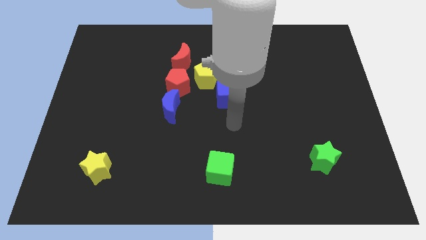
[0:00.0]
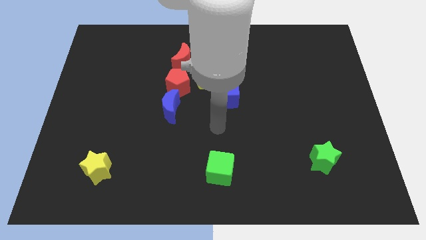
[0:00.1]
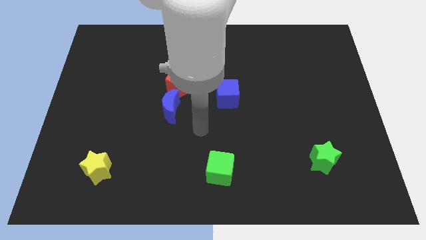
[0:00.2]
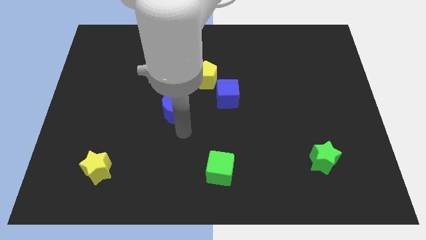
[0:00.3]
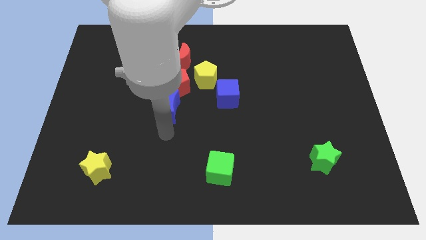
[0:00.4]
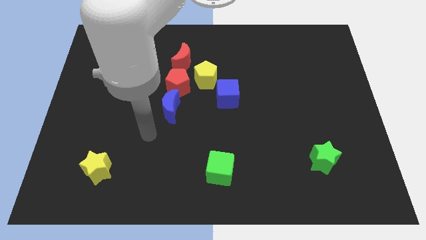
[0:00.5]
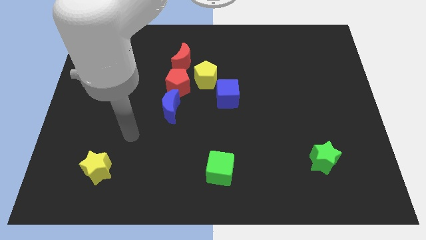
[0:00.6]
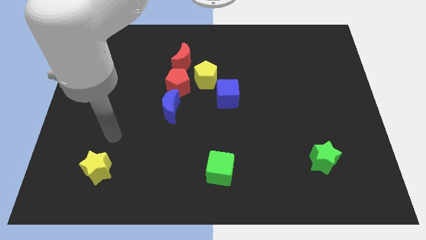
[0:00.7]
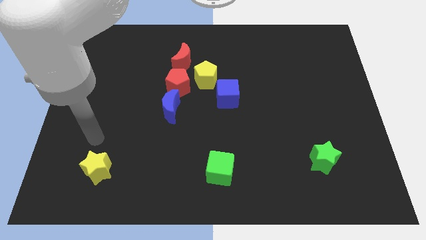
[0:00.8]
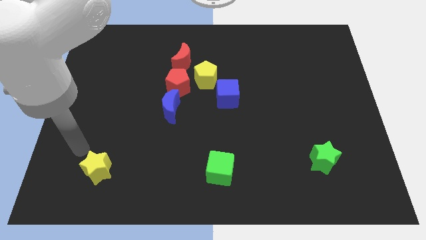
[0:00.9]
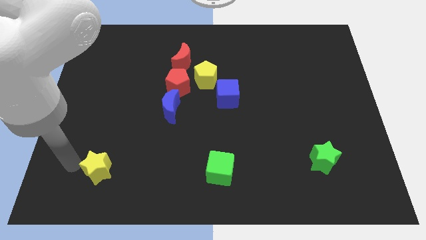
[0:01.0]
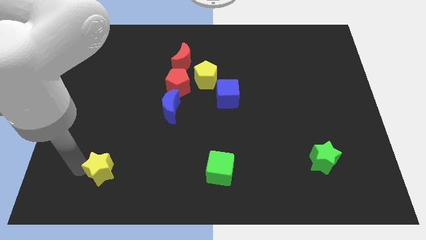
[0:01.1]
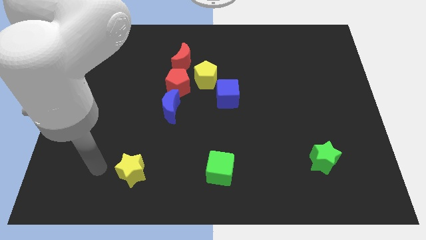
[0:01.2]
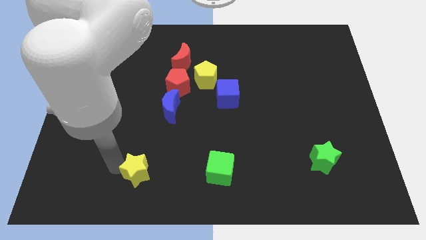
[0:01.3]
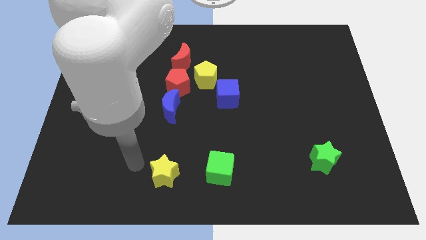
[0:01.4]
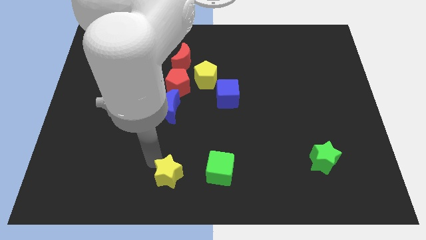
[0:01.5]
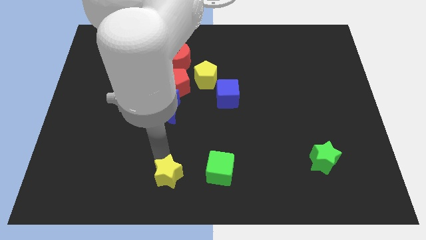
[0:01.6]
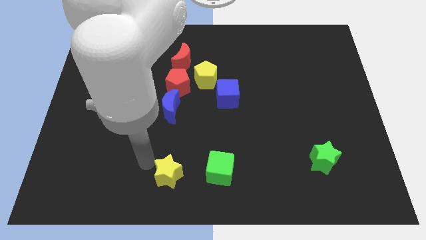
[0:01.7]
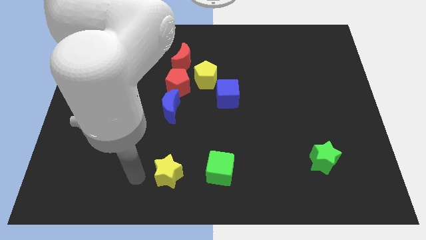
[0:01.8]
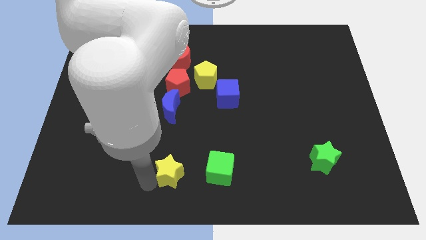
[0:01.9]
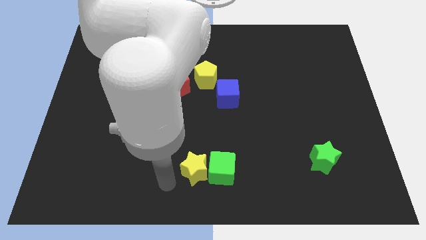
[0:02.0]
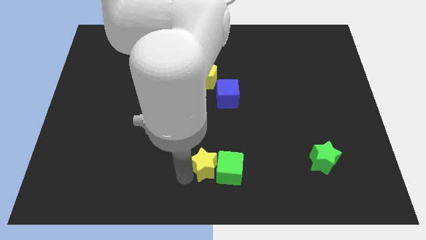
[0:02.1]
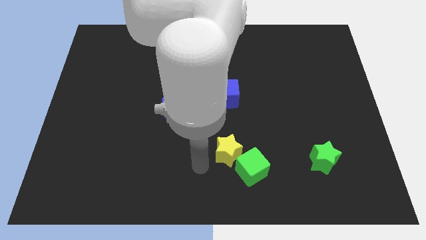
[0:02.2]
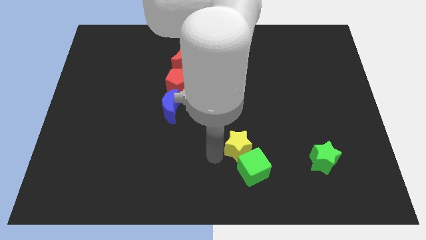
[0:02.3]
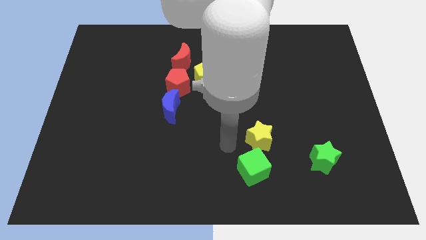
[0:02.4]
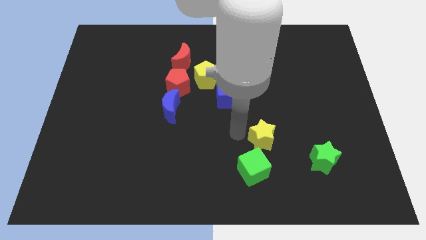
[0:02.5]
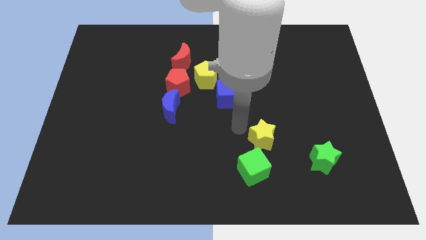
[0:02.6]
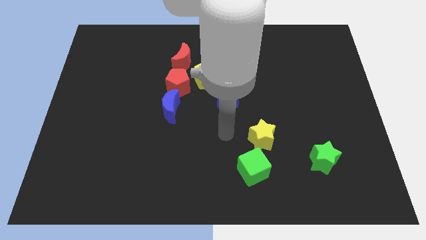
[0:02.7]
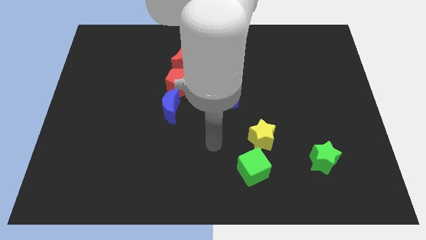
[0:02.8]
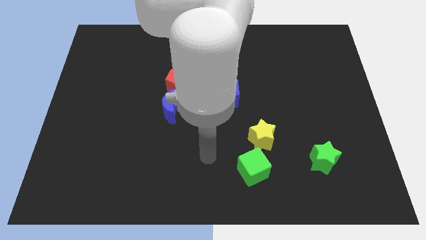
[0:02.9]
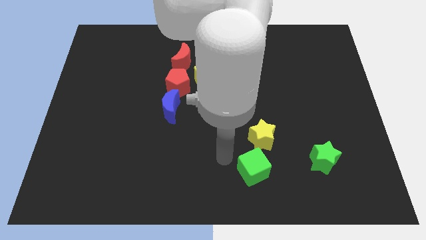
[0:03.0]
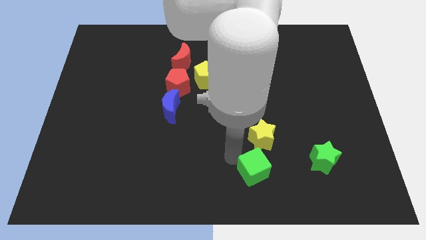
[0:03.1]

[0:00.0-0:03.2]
move the yellow star above the green cube

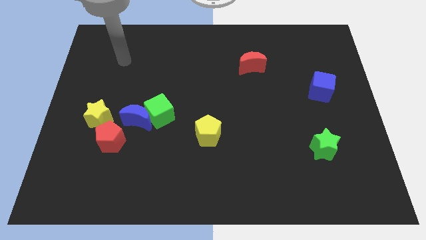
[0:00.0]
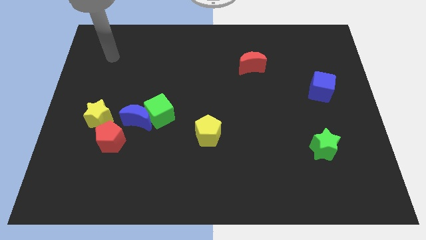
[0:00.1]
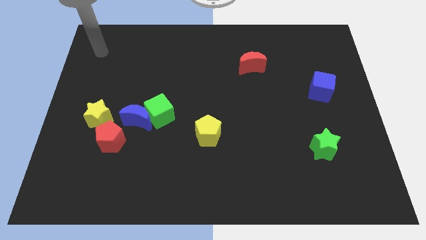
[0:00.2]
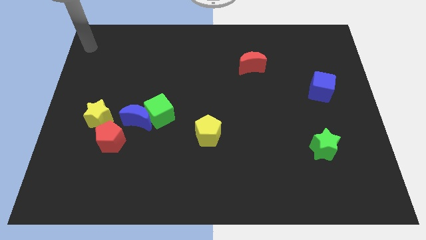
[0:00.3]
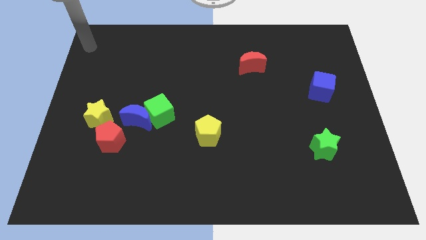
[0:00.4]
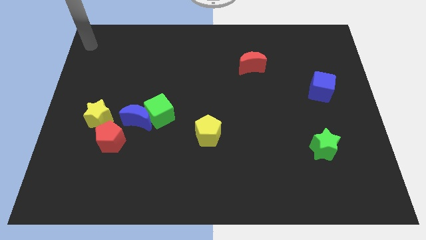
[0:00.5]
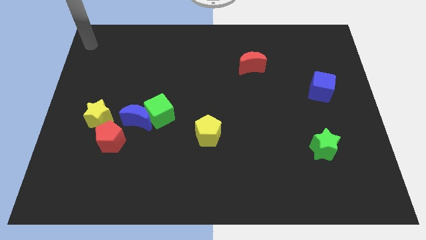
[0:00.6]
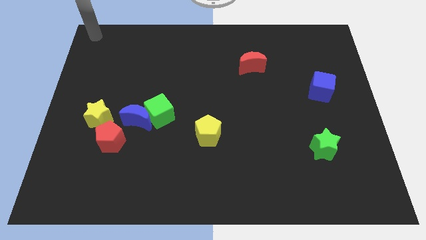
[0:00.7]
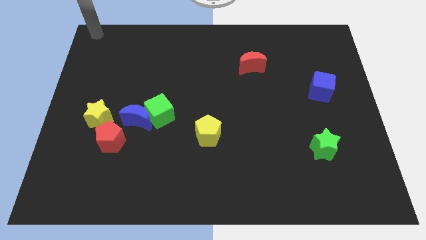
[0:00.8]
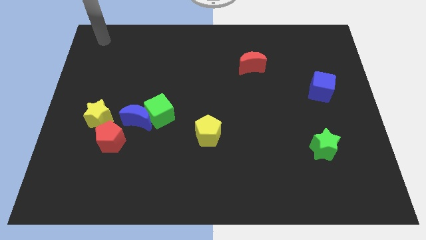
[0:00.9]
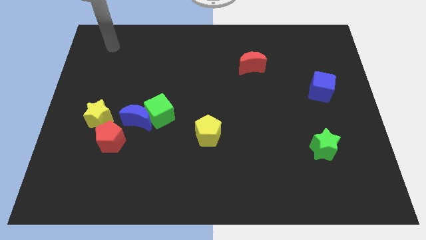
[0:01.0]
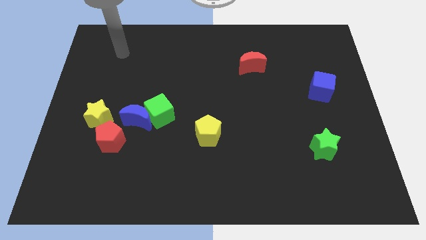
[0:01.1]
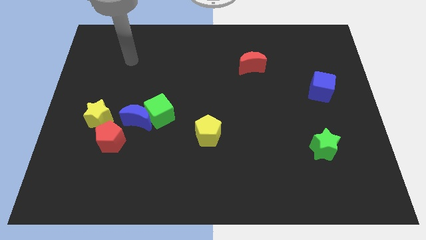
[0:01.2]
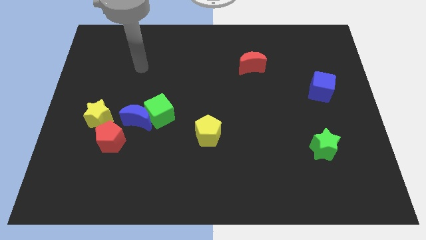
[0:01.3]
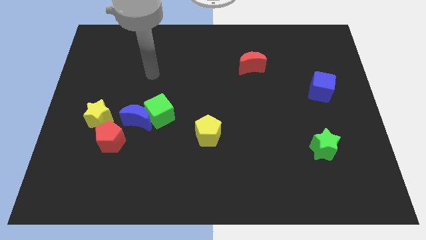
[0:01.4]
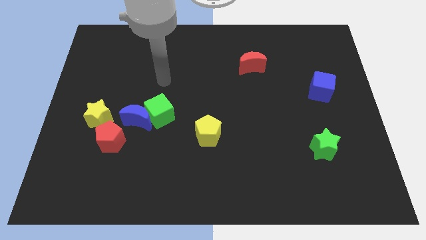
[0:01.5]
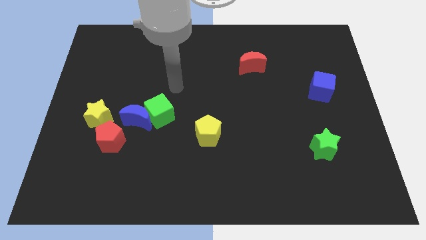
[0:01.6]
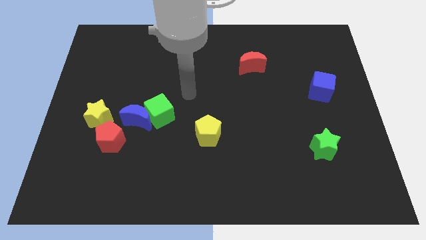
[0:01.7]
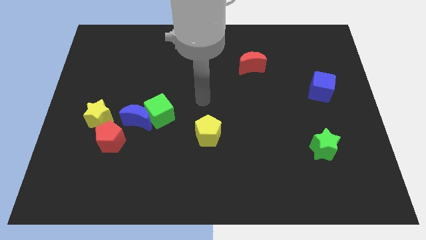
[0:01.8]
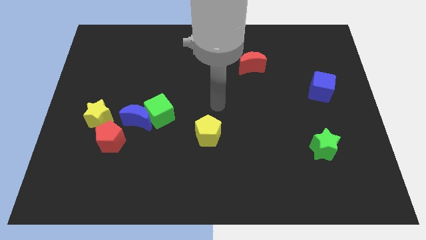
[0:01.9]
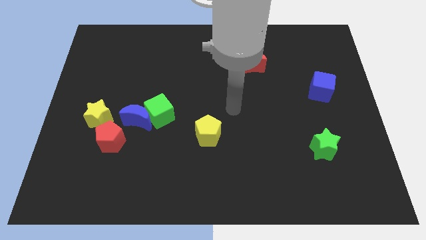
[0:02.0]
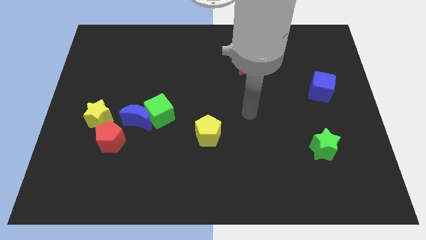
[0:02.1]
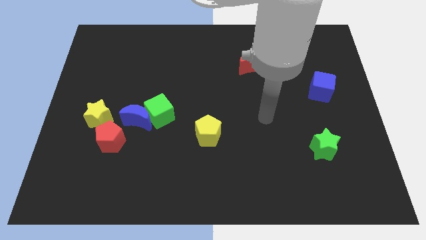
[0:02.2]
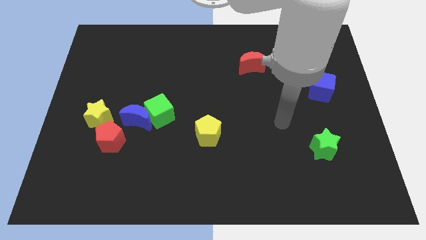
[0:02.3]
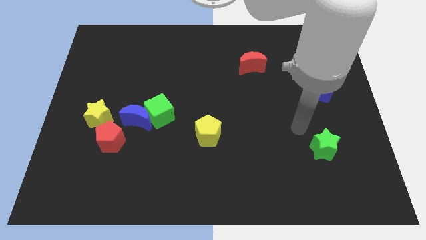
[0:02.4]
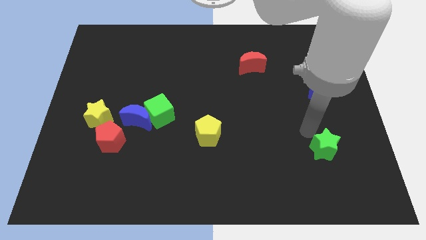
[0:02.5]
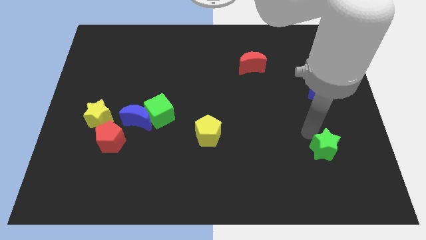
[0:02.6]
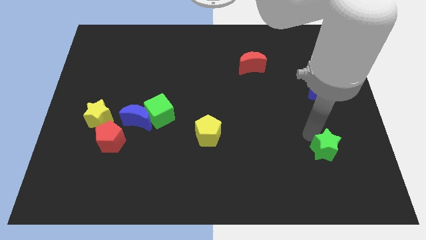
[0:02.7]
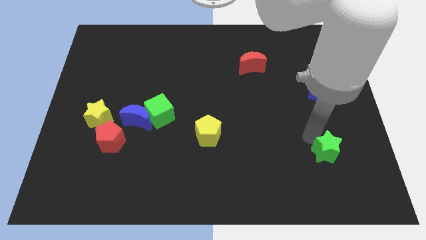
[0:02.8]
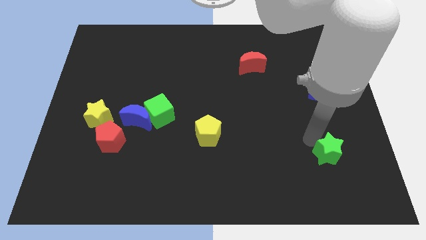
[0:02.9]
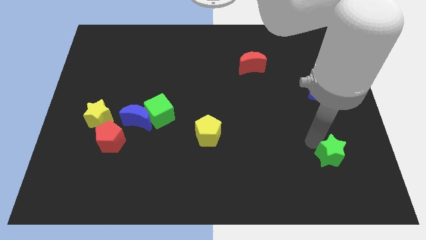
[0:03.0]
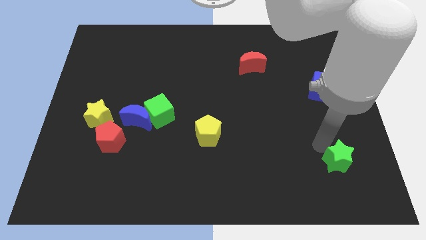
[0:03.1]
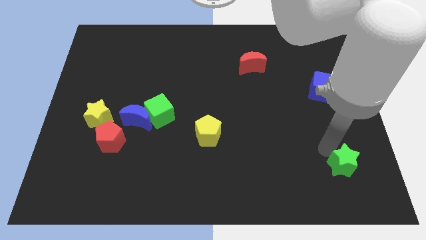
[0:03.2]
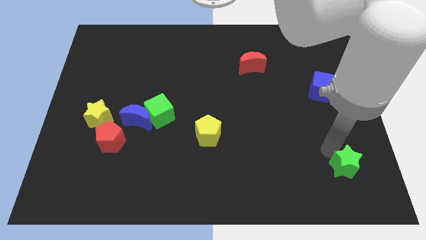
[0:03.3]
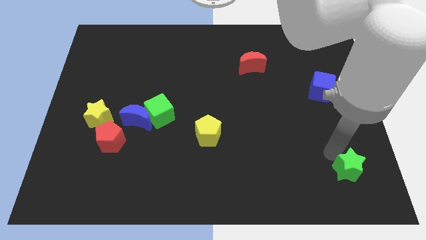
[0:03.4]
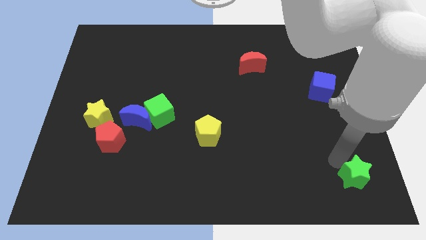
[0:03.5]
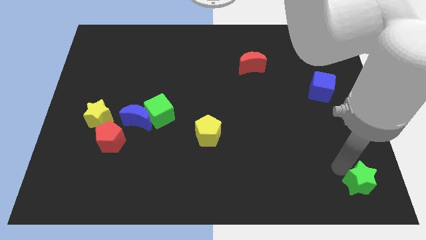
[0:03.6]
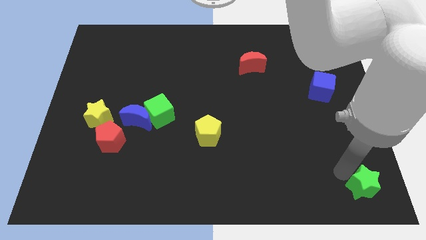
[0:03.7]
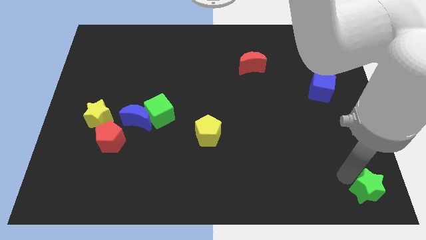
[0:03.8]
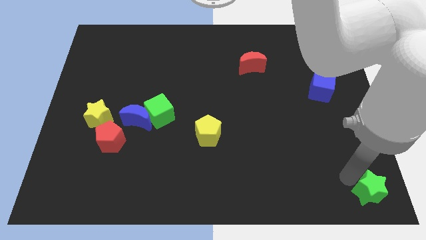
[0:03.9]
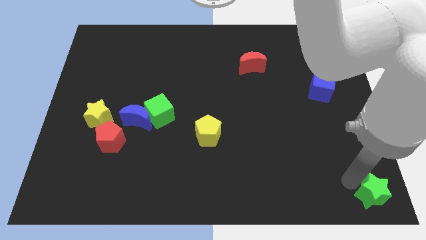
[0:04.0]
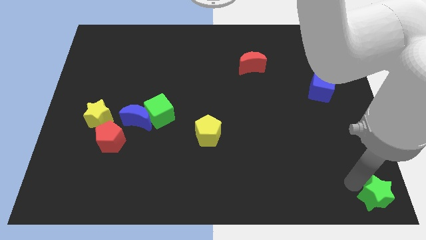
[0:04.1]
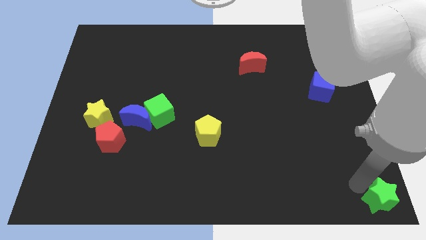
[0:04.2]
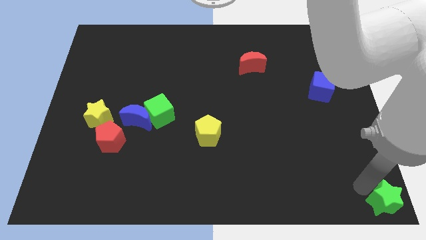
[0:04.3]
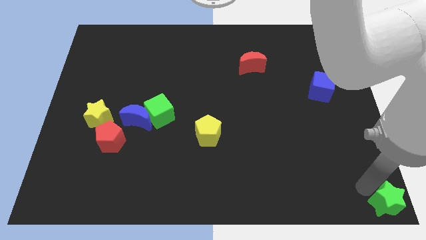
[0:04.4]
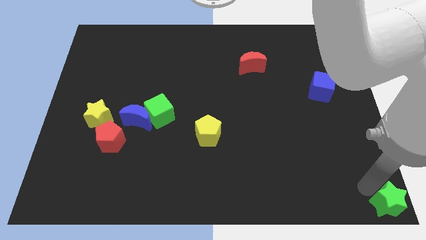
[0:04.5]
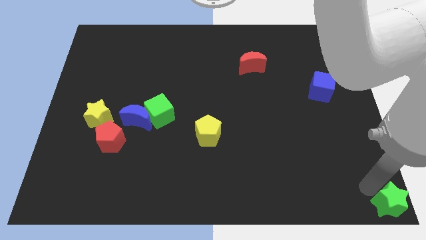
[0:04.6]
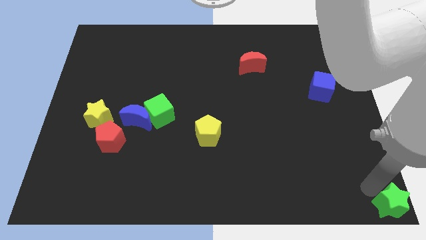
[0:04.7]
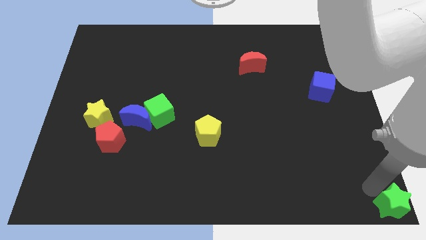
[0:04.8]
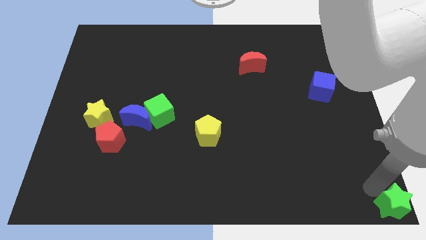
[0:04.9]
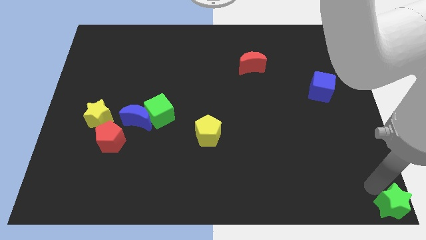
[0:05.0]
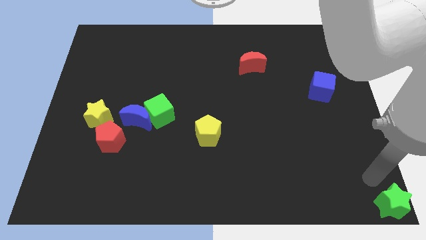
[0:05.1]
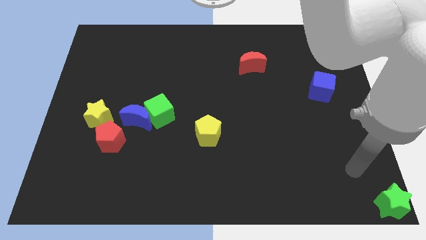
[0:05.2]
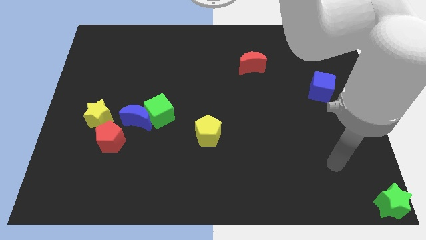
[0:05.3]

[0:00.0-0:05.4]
push the green star to the bottom right

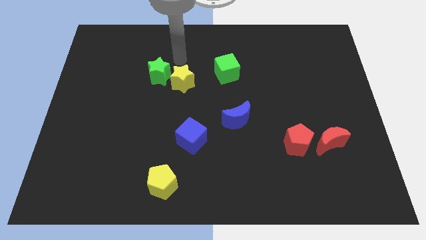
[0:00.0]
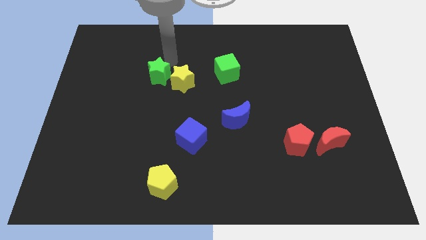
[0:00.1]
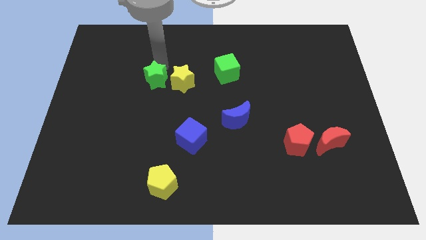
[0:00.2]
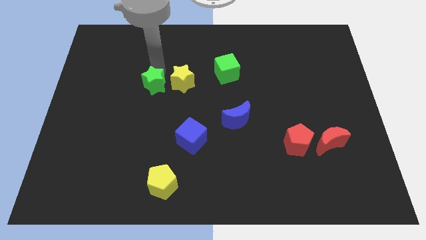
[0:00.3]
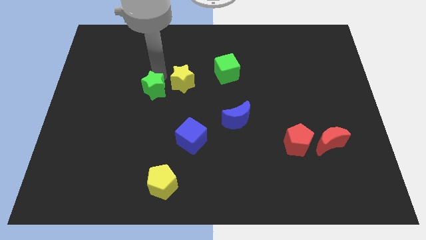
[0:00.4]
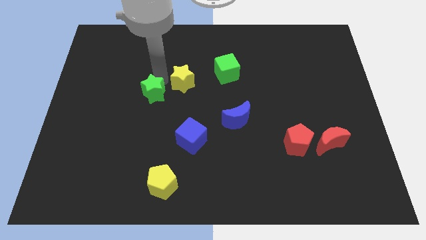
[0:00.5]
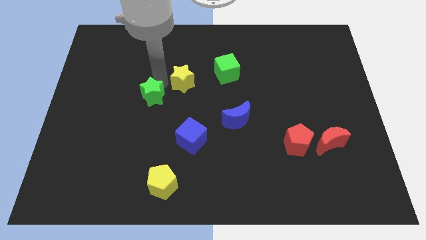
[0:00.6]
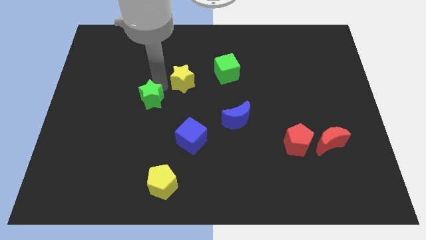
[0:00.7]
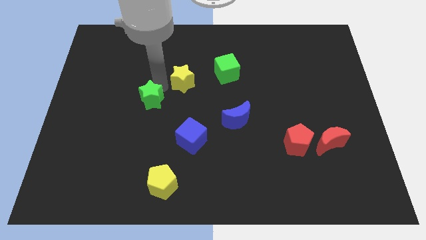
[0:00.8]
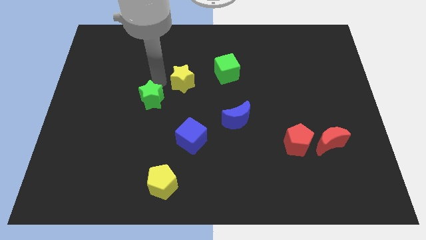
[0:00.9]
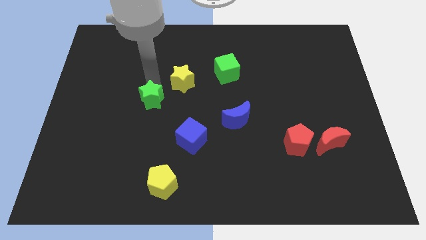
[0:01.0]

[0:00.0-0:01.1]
place the green star at the bottom left of the yellow star
